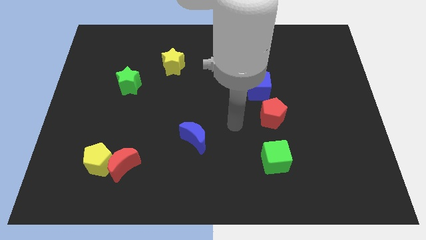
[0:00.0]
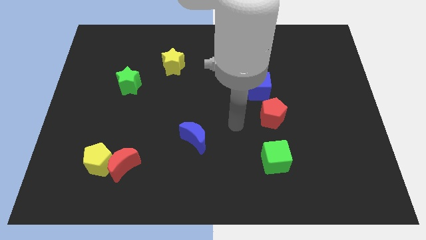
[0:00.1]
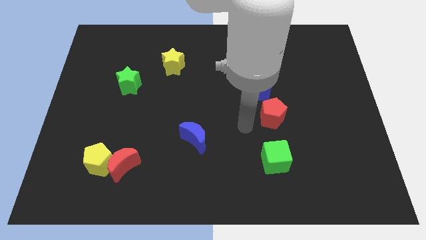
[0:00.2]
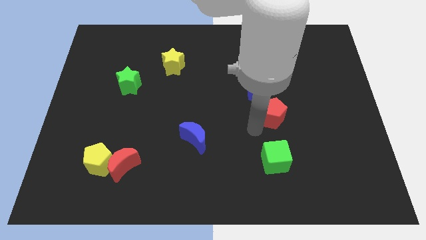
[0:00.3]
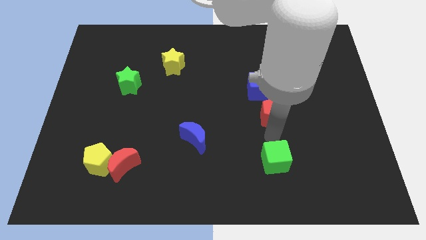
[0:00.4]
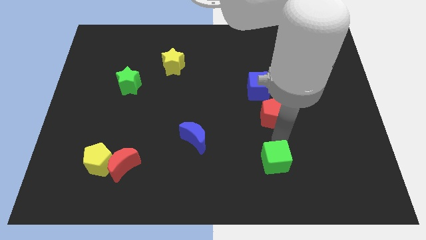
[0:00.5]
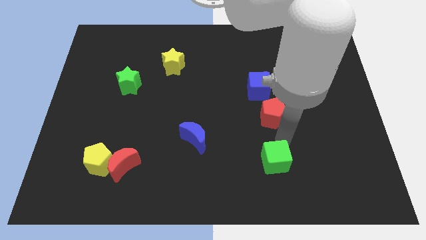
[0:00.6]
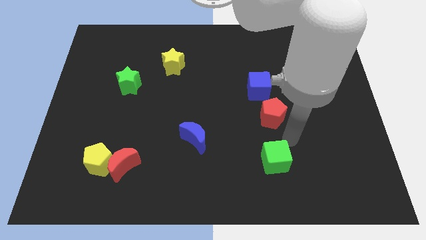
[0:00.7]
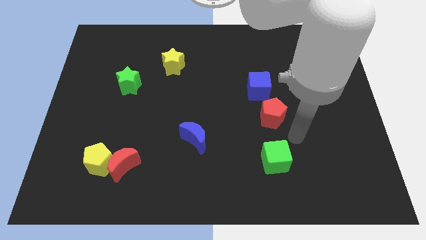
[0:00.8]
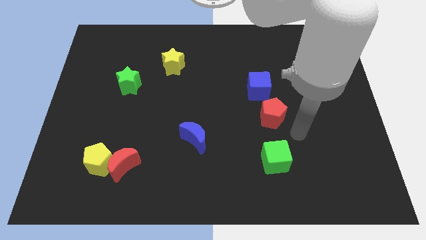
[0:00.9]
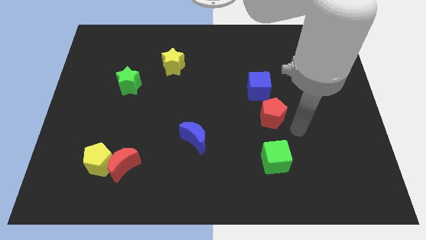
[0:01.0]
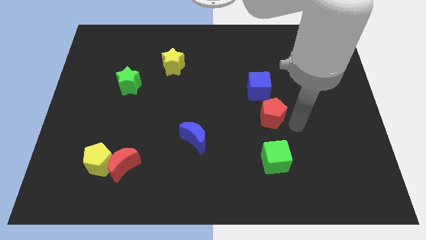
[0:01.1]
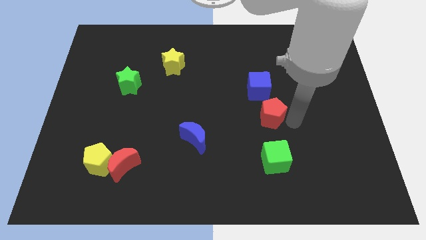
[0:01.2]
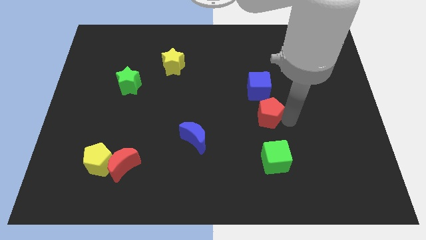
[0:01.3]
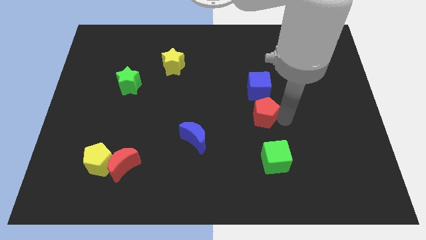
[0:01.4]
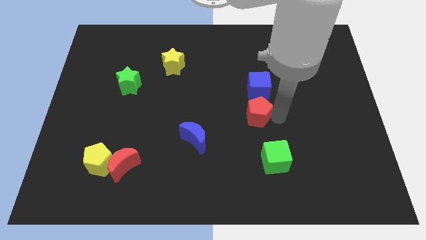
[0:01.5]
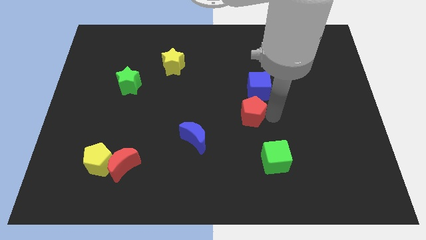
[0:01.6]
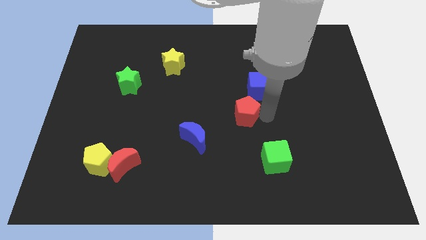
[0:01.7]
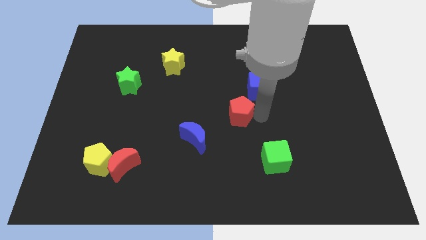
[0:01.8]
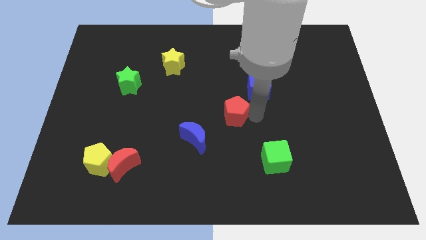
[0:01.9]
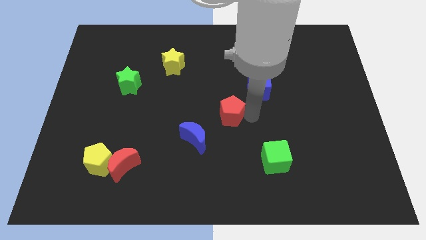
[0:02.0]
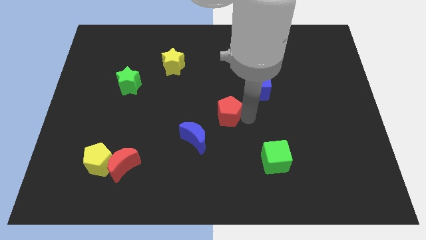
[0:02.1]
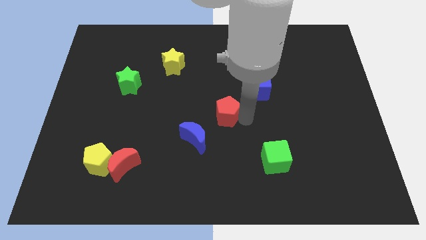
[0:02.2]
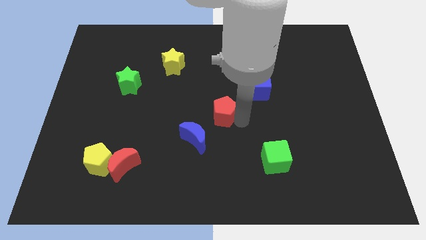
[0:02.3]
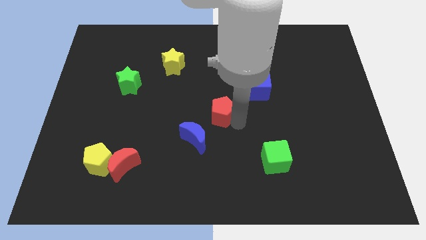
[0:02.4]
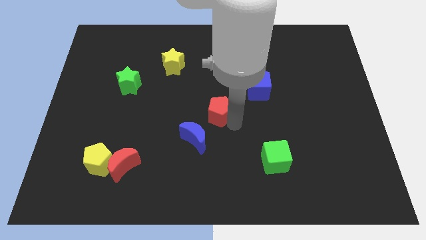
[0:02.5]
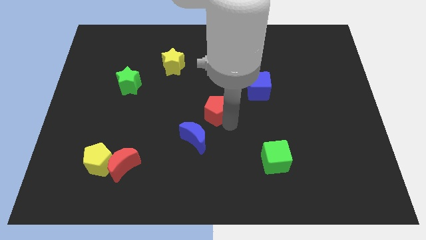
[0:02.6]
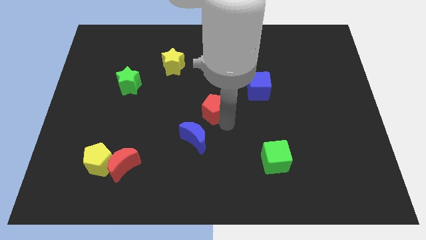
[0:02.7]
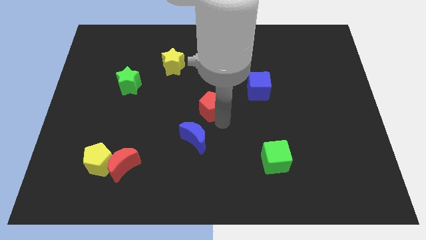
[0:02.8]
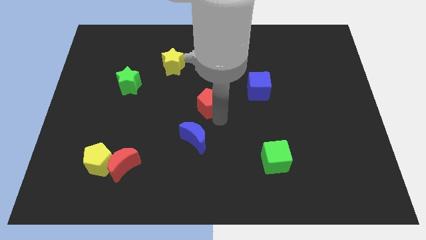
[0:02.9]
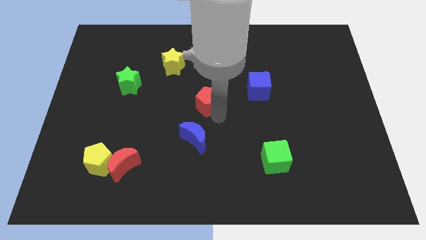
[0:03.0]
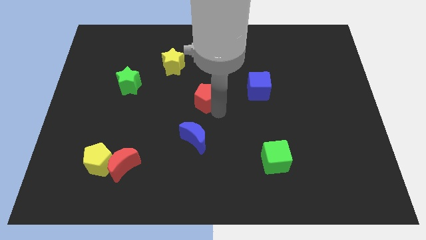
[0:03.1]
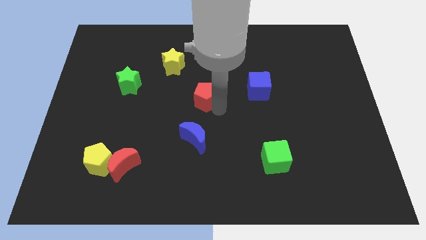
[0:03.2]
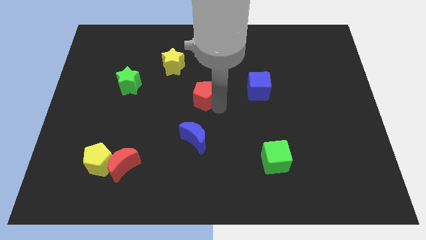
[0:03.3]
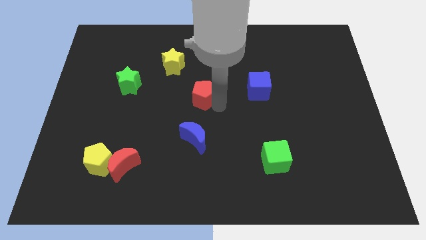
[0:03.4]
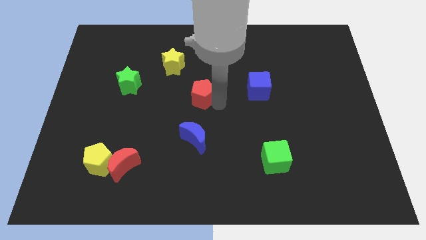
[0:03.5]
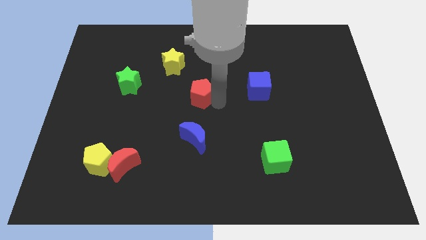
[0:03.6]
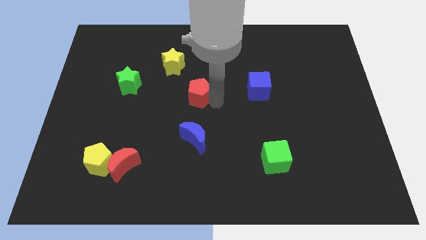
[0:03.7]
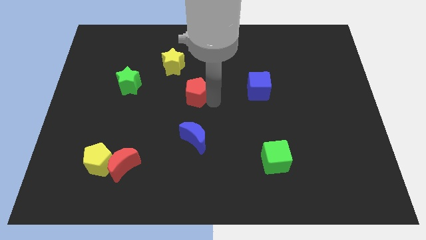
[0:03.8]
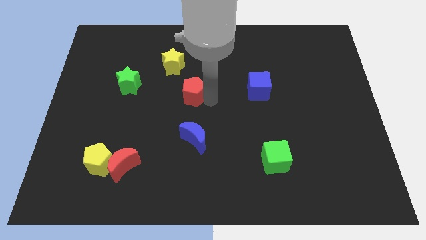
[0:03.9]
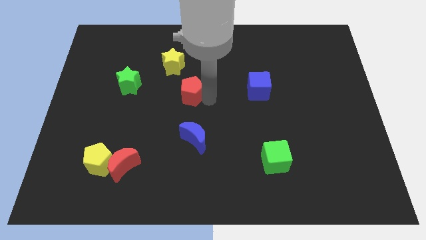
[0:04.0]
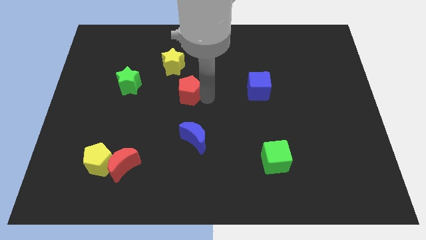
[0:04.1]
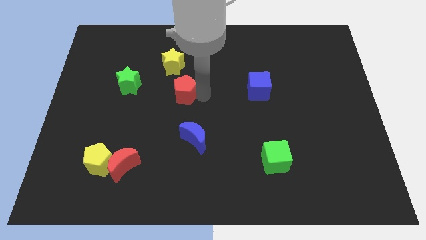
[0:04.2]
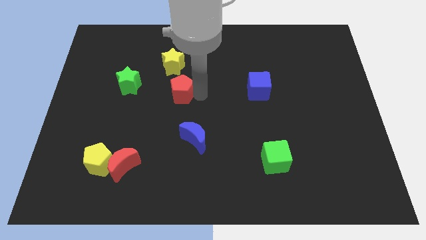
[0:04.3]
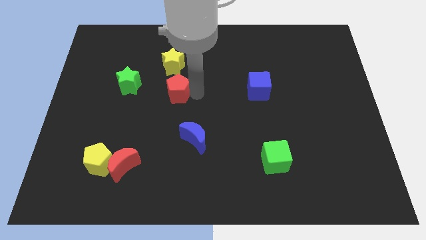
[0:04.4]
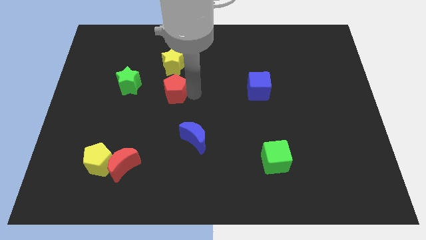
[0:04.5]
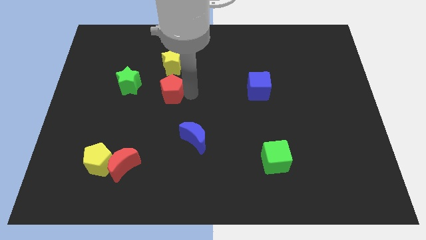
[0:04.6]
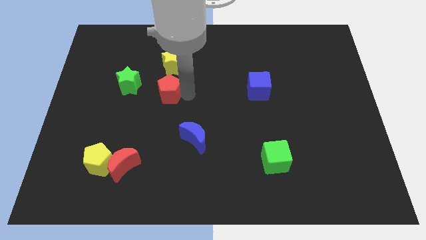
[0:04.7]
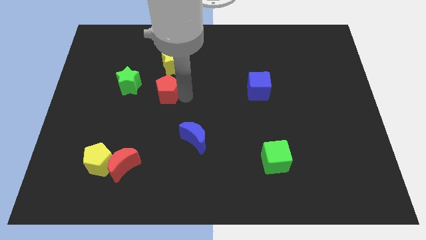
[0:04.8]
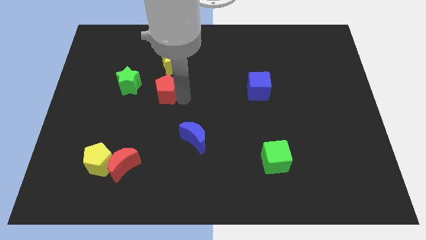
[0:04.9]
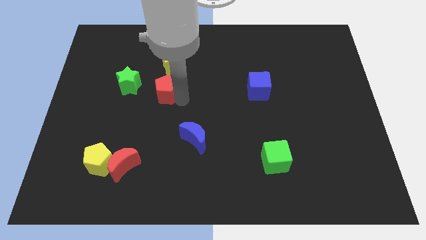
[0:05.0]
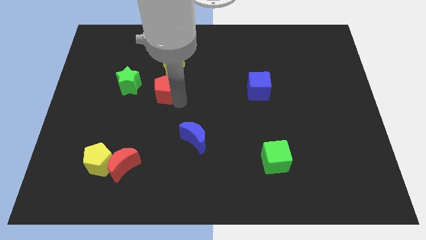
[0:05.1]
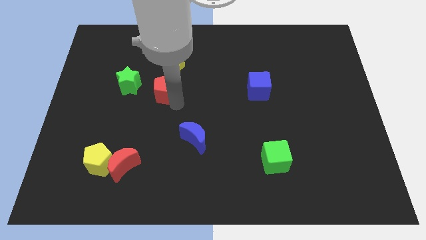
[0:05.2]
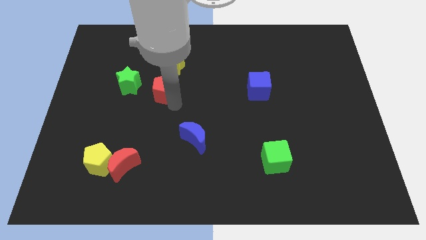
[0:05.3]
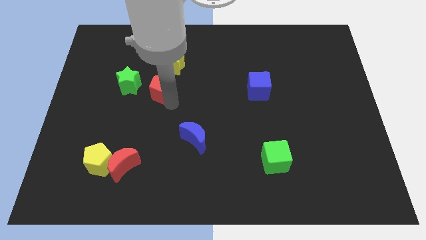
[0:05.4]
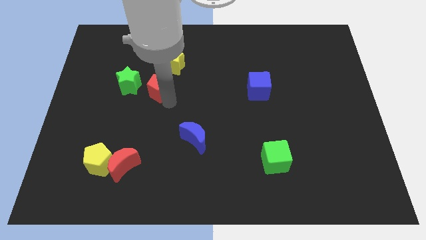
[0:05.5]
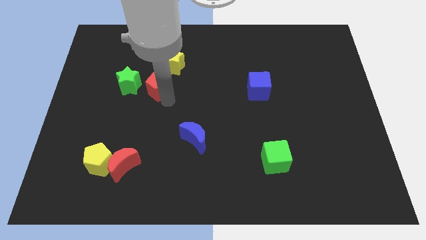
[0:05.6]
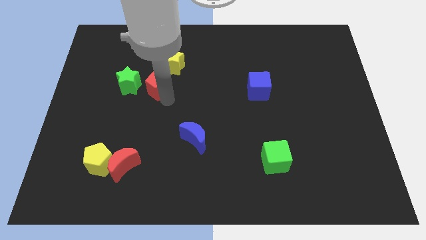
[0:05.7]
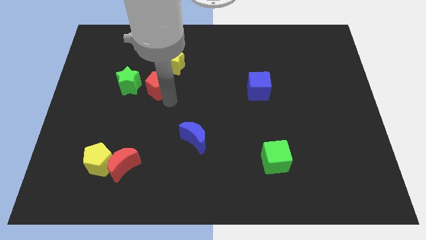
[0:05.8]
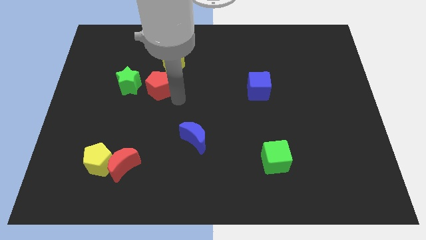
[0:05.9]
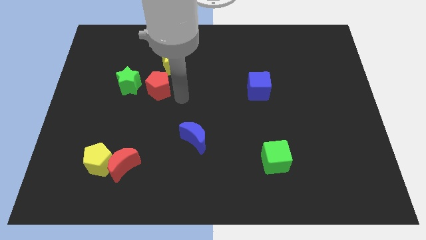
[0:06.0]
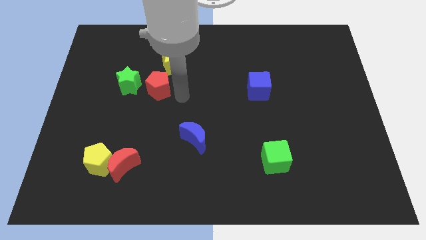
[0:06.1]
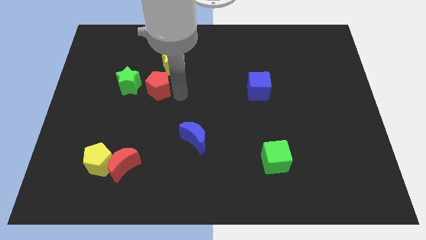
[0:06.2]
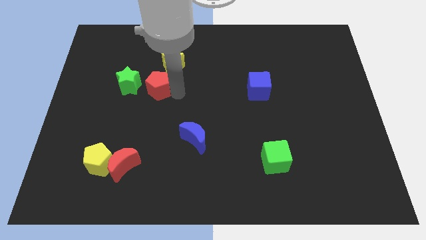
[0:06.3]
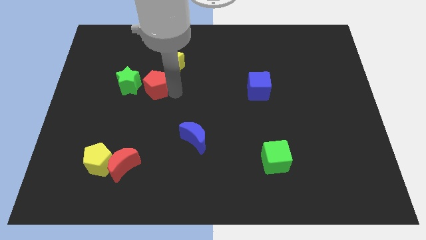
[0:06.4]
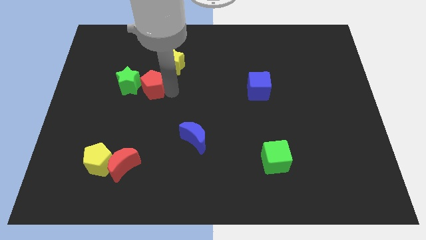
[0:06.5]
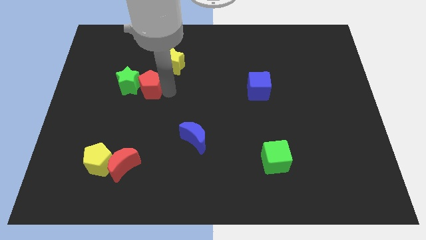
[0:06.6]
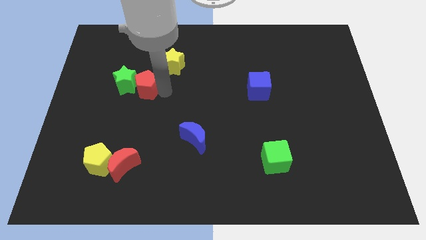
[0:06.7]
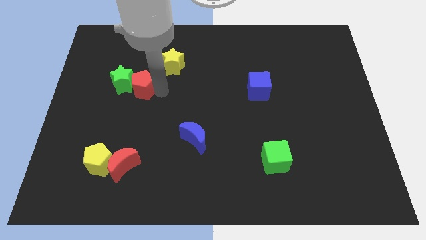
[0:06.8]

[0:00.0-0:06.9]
move the red pentagon to the green star

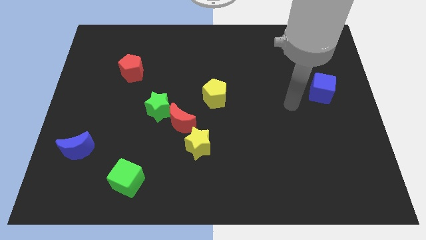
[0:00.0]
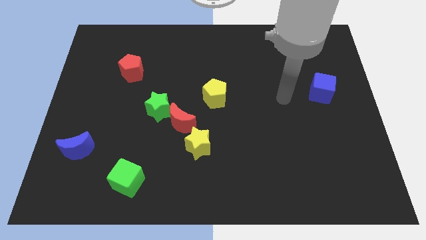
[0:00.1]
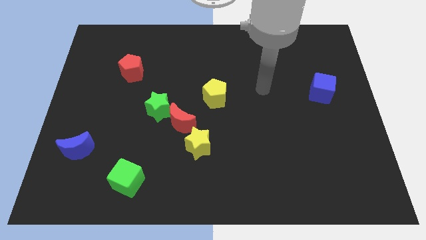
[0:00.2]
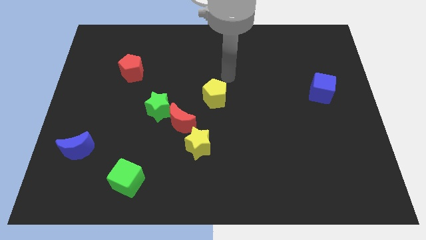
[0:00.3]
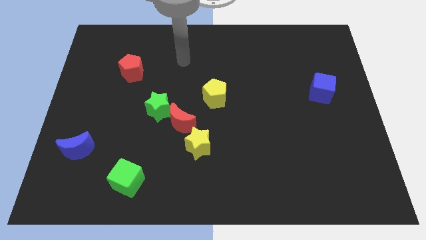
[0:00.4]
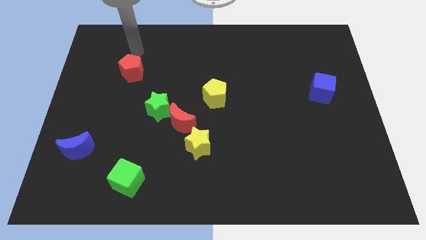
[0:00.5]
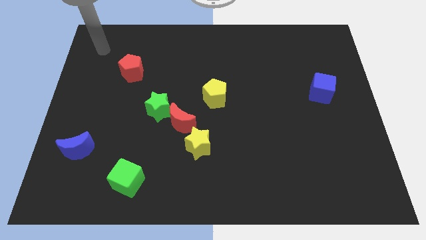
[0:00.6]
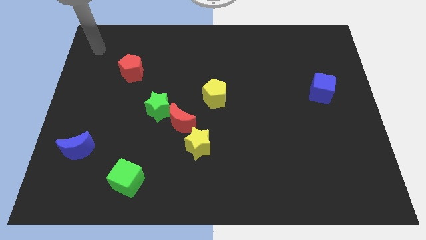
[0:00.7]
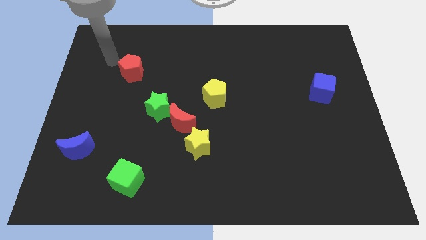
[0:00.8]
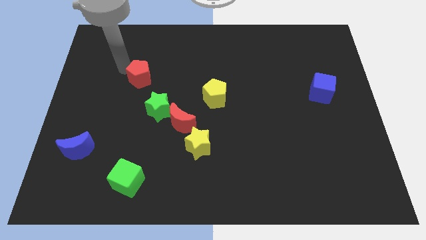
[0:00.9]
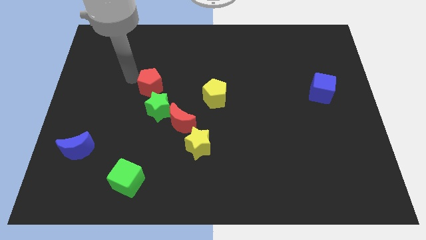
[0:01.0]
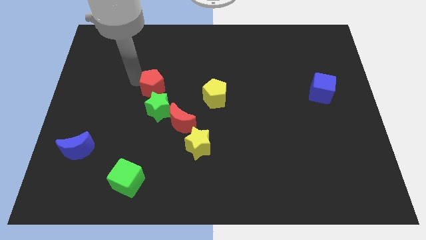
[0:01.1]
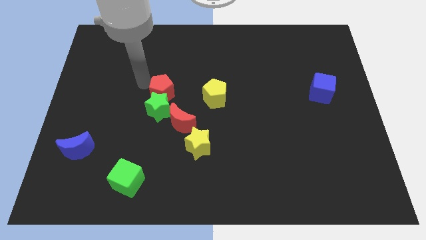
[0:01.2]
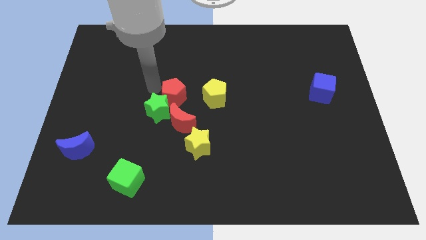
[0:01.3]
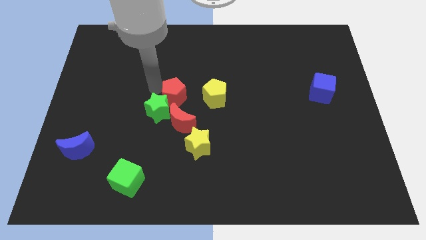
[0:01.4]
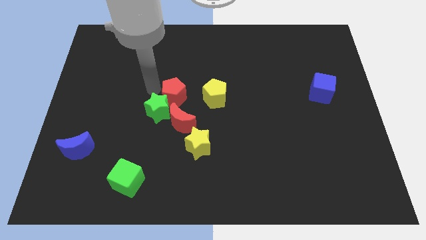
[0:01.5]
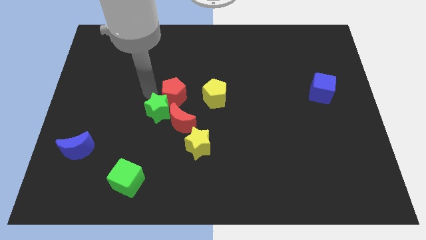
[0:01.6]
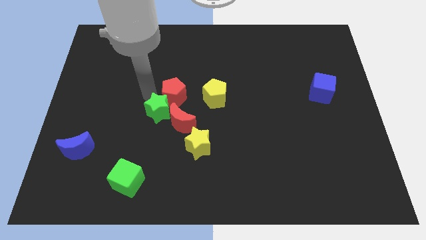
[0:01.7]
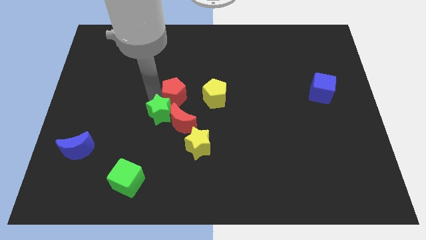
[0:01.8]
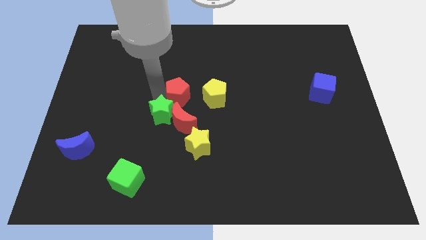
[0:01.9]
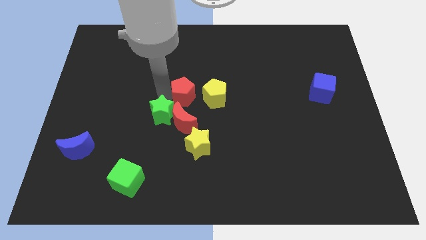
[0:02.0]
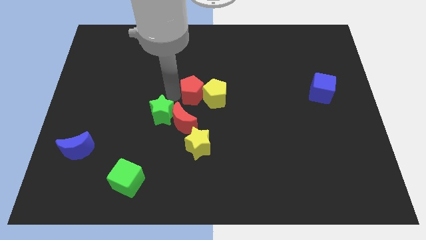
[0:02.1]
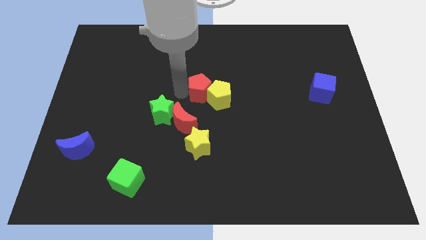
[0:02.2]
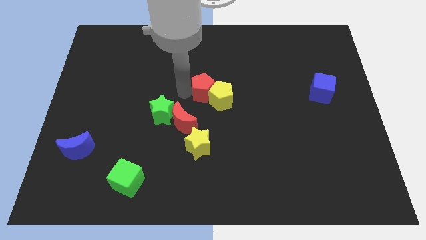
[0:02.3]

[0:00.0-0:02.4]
put the red pentagon to the yellow pentagon
